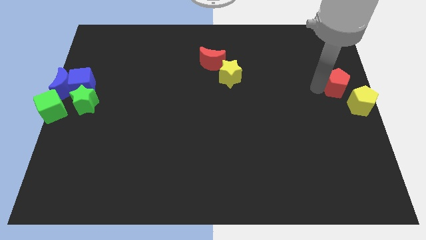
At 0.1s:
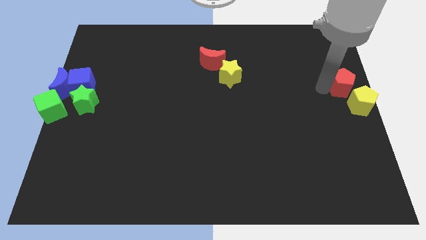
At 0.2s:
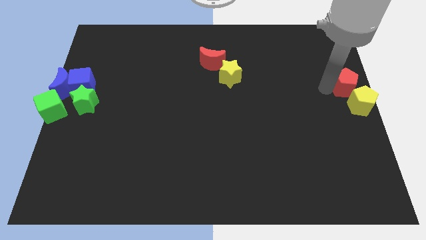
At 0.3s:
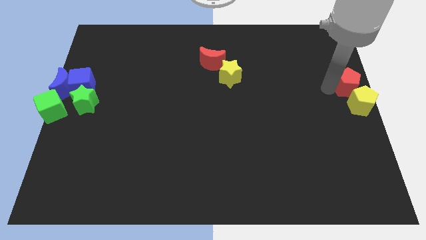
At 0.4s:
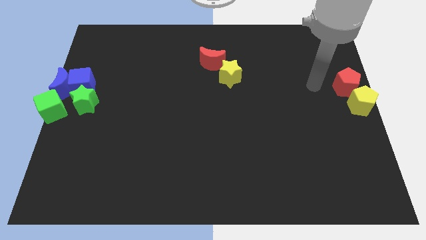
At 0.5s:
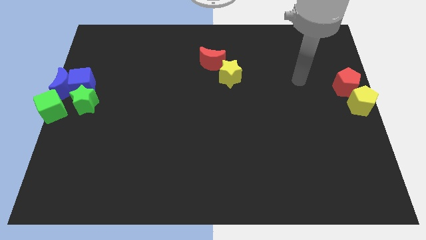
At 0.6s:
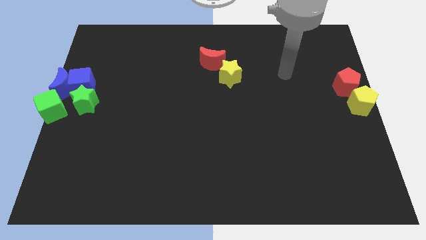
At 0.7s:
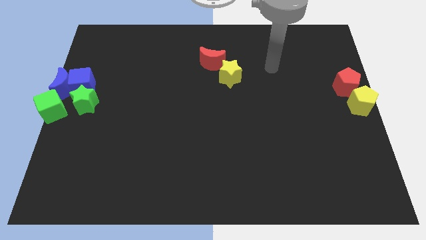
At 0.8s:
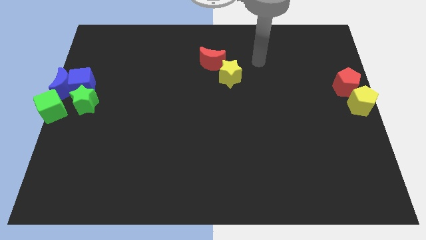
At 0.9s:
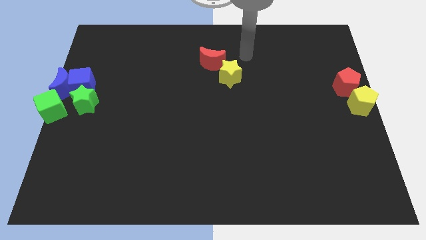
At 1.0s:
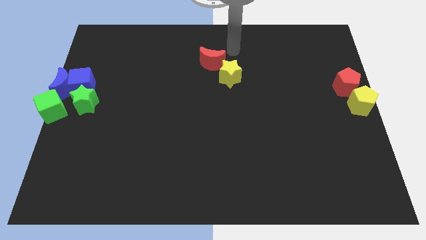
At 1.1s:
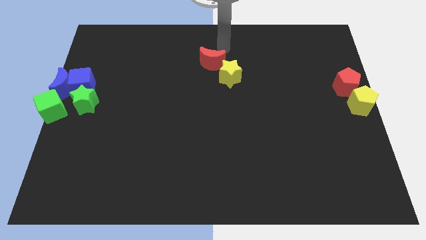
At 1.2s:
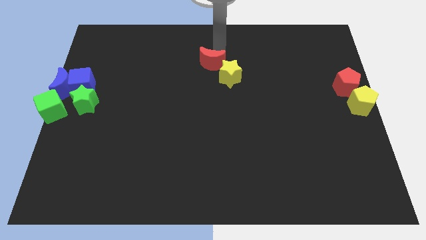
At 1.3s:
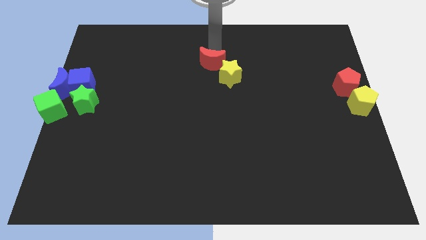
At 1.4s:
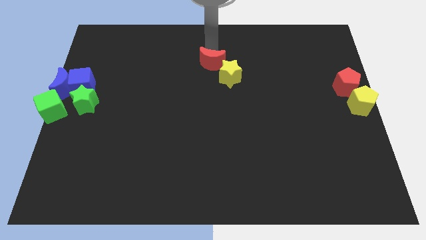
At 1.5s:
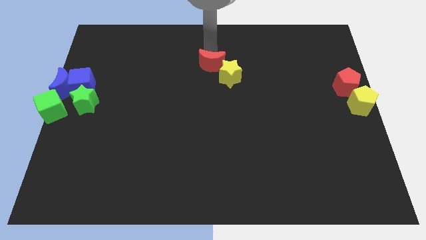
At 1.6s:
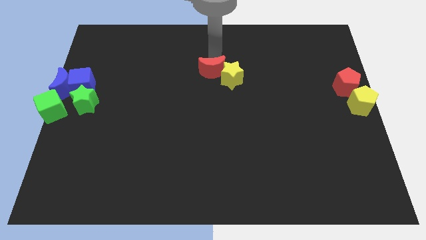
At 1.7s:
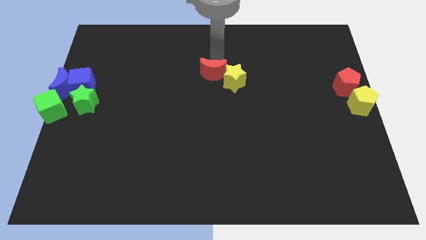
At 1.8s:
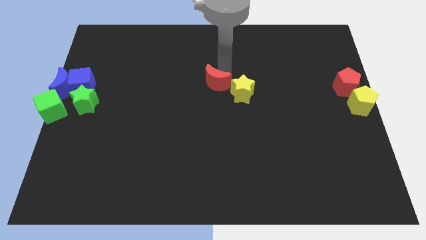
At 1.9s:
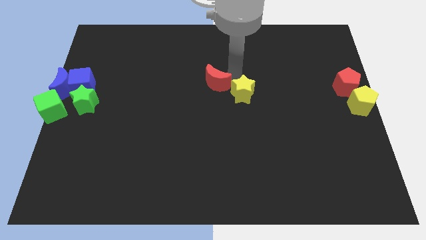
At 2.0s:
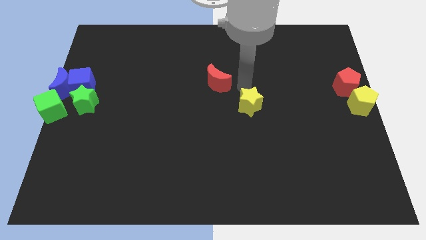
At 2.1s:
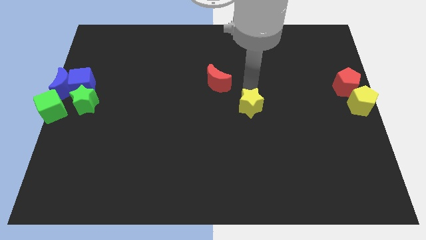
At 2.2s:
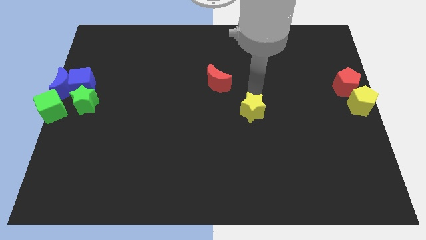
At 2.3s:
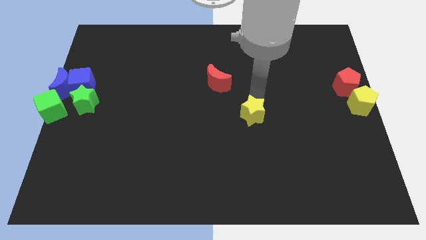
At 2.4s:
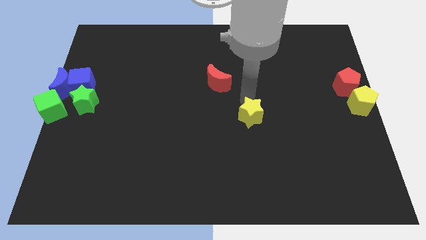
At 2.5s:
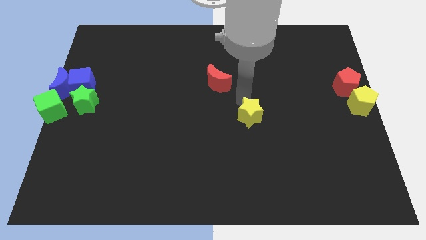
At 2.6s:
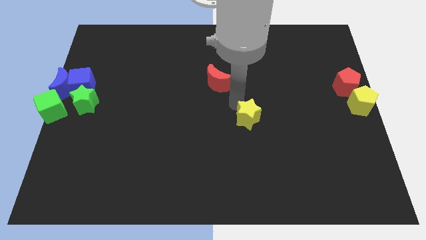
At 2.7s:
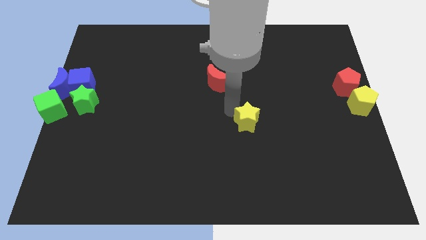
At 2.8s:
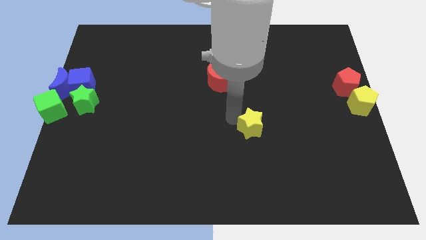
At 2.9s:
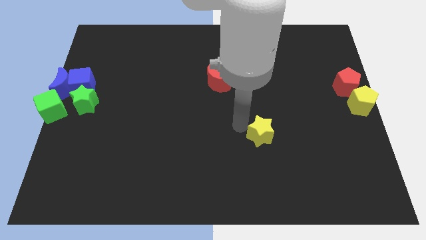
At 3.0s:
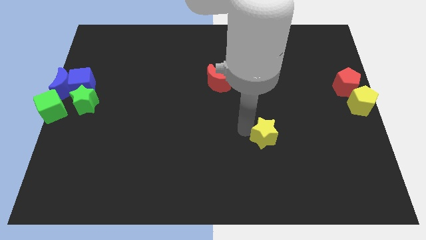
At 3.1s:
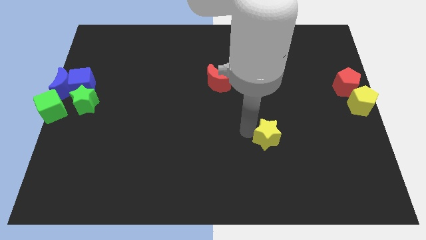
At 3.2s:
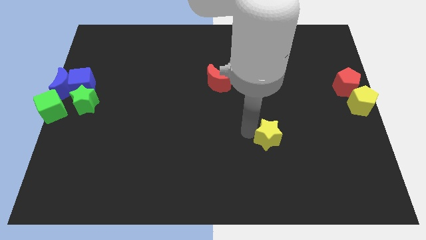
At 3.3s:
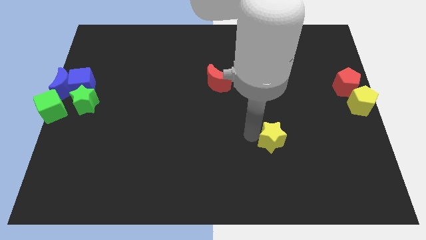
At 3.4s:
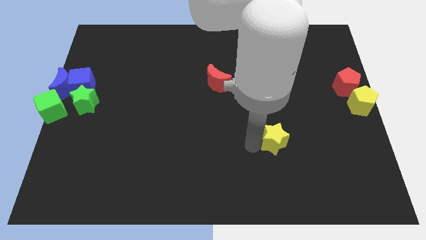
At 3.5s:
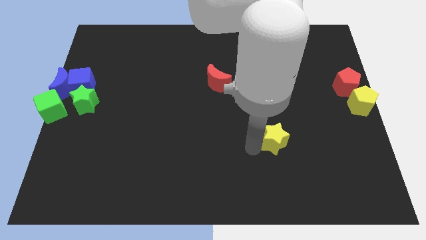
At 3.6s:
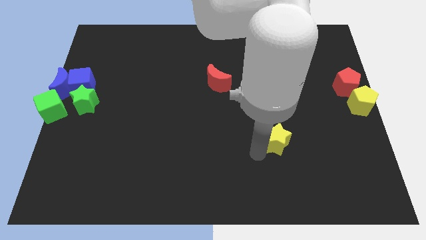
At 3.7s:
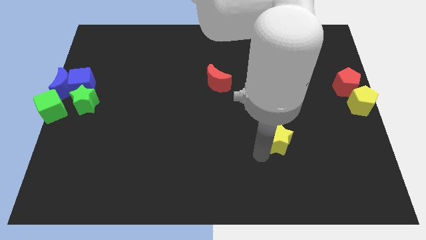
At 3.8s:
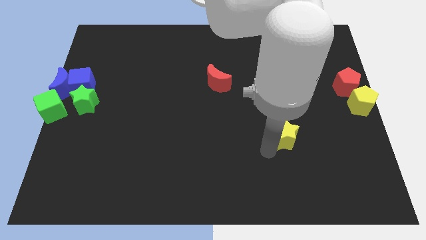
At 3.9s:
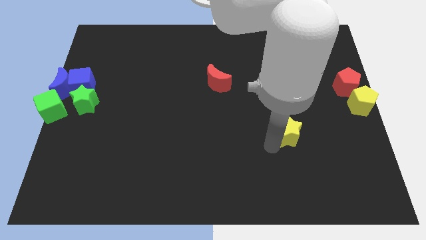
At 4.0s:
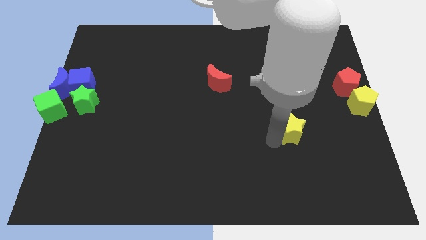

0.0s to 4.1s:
slide the yellow star diagonally bottom right red moon

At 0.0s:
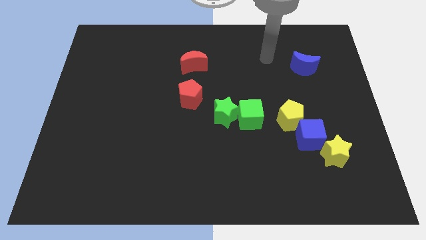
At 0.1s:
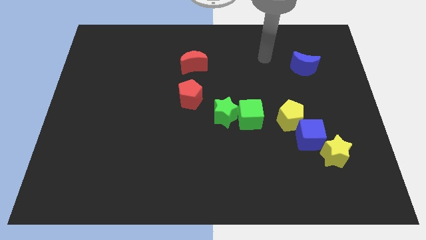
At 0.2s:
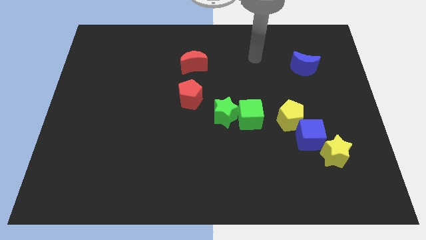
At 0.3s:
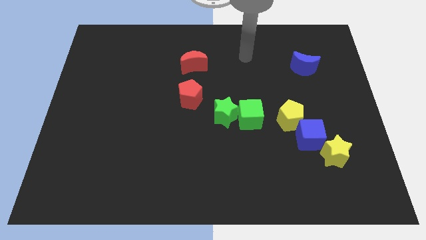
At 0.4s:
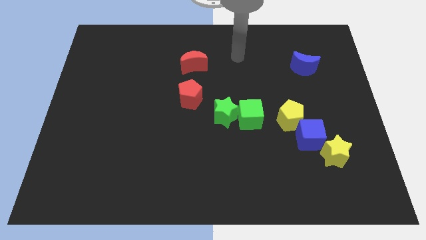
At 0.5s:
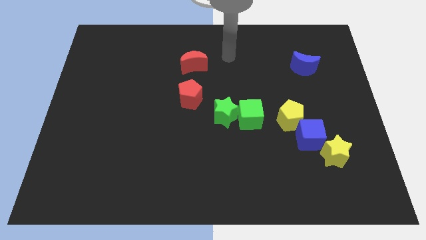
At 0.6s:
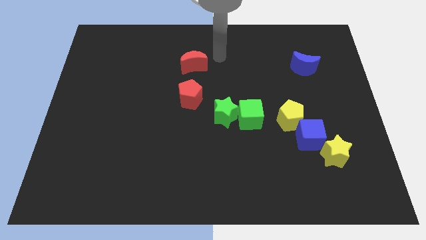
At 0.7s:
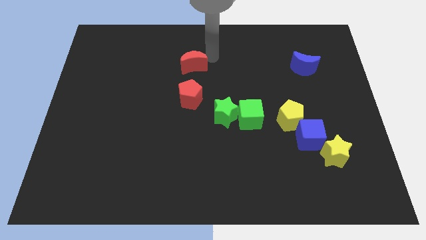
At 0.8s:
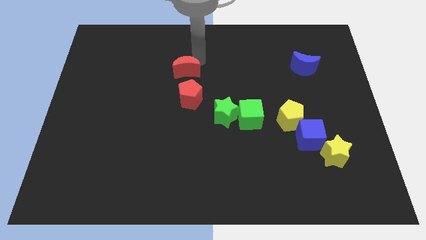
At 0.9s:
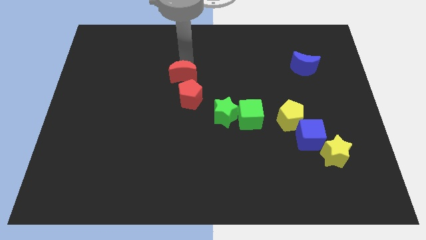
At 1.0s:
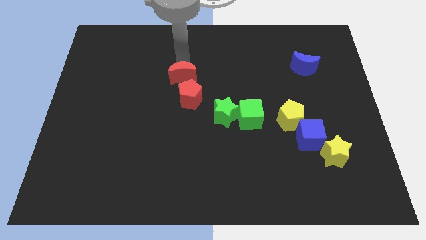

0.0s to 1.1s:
move your arm to the right of the red moon

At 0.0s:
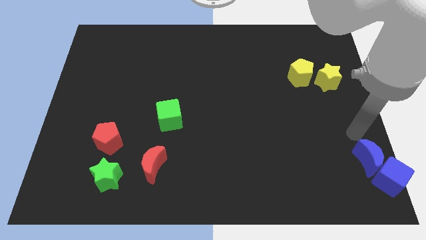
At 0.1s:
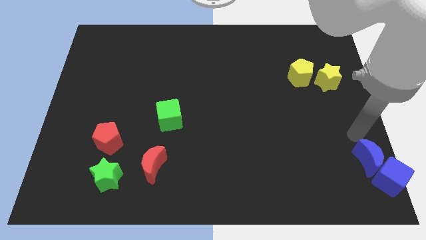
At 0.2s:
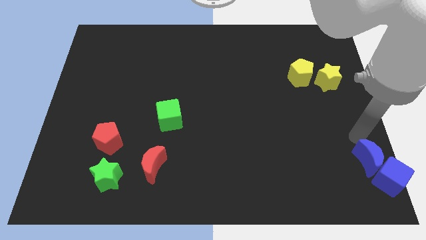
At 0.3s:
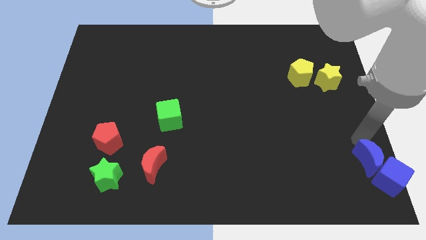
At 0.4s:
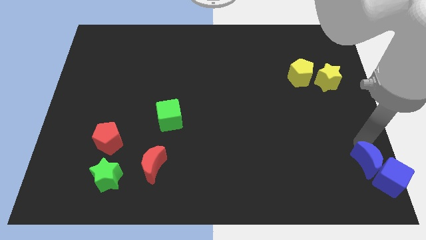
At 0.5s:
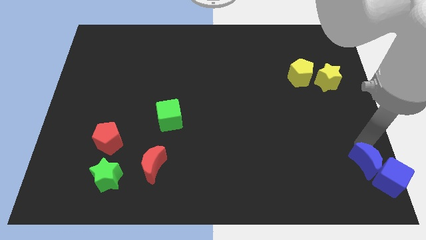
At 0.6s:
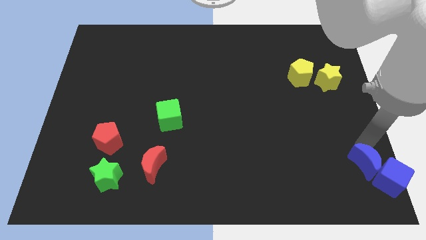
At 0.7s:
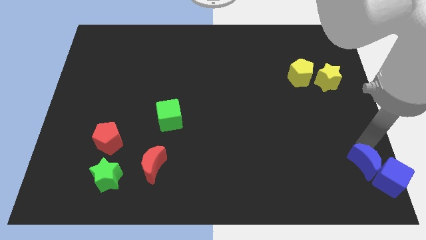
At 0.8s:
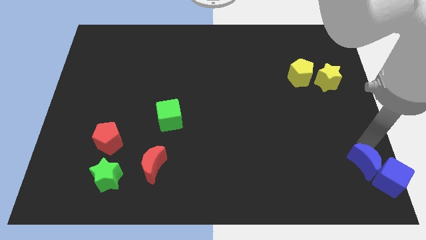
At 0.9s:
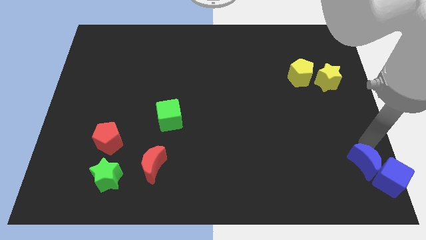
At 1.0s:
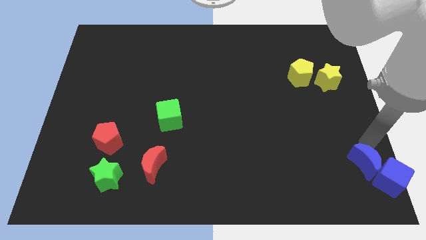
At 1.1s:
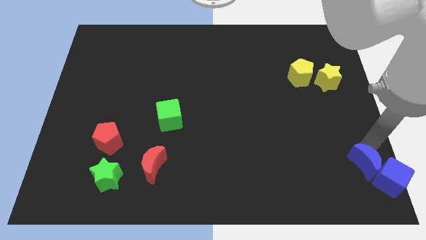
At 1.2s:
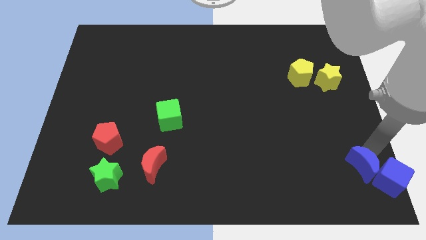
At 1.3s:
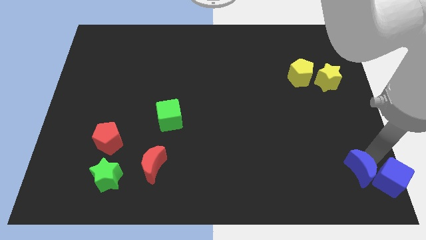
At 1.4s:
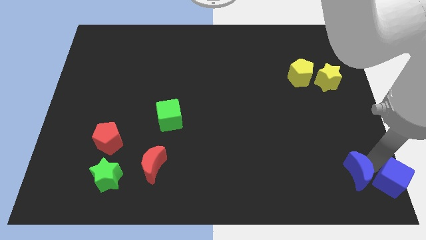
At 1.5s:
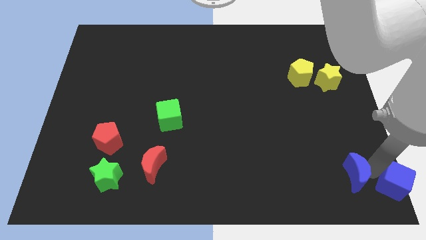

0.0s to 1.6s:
separate the blue moon from blue cube

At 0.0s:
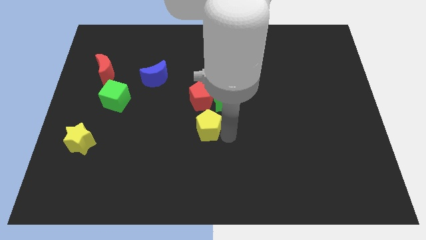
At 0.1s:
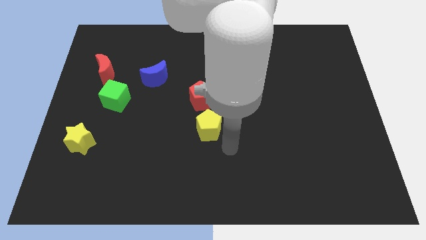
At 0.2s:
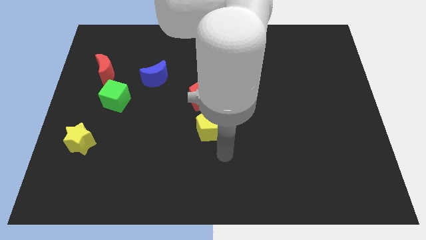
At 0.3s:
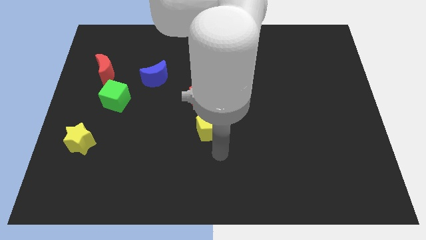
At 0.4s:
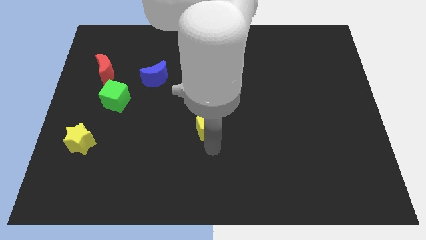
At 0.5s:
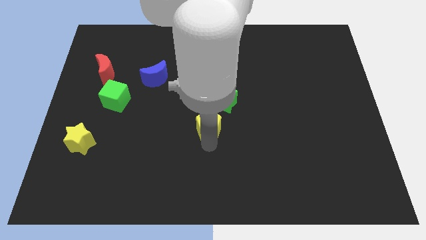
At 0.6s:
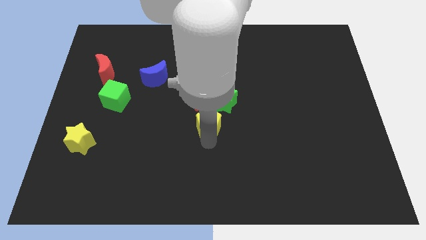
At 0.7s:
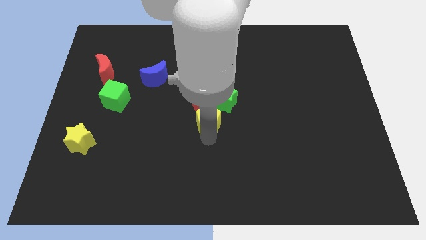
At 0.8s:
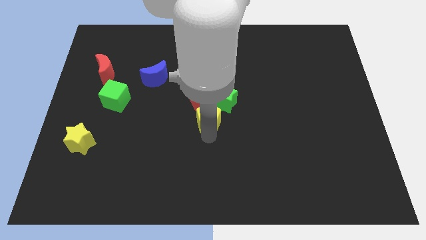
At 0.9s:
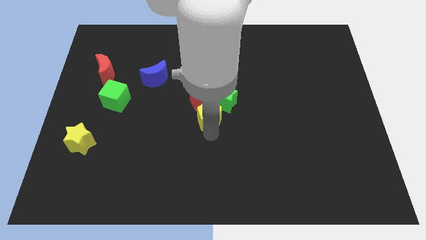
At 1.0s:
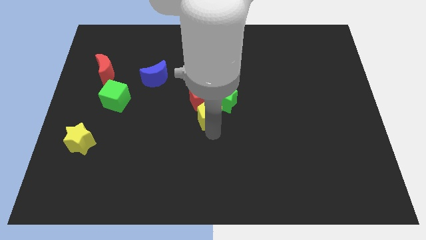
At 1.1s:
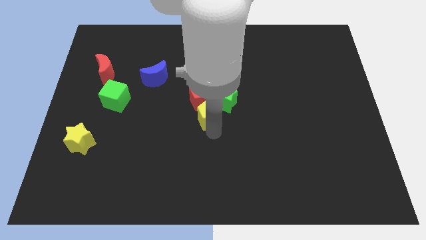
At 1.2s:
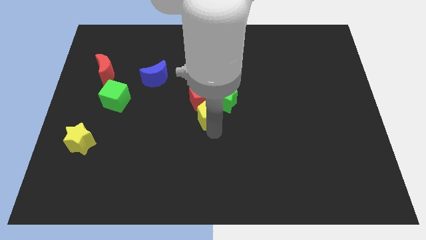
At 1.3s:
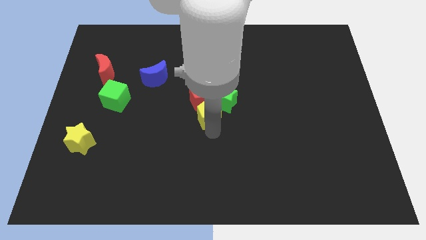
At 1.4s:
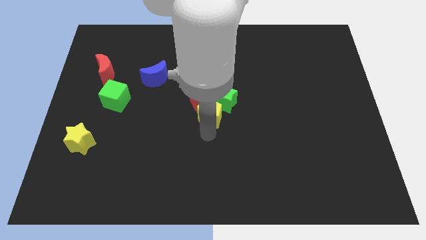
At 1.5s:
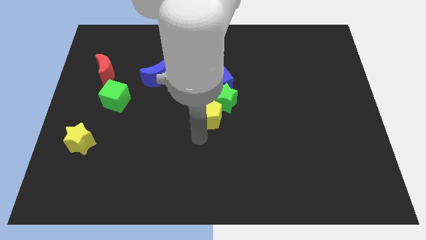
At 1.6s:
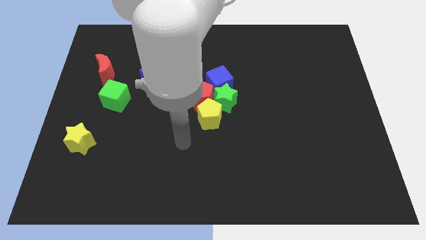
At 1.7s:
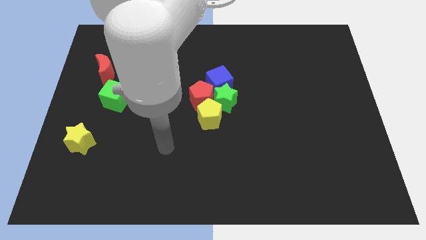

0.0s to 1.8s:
move the yellow pentagon close to the bottom of the green star and red pentagon

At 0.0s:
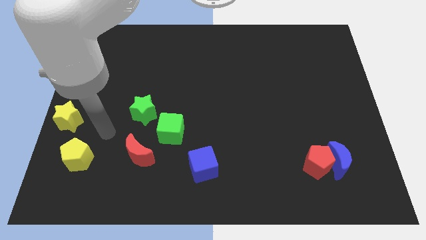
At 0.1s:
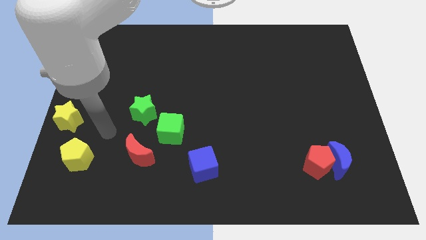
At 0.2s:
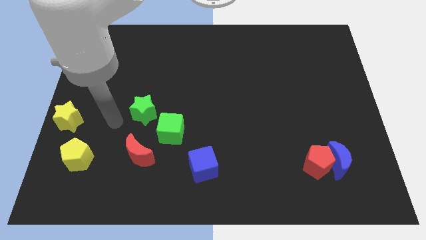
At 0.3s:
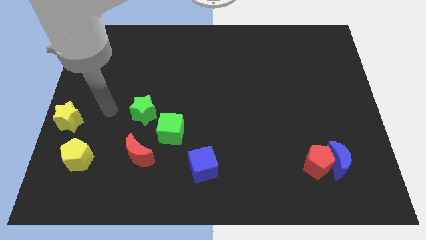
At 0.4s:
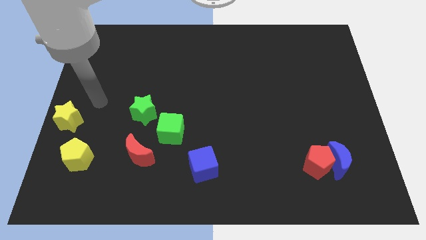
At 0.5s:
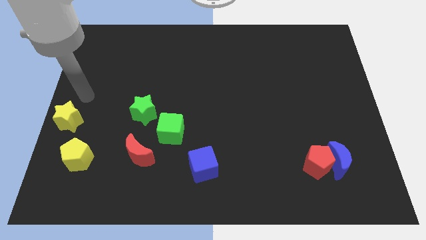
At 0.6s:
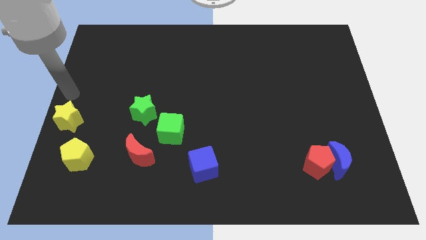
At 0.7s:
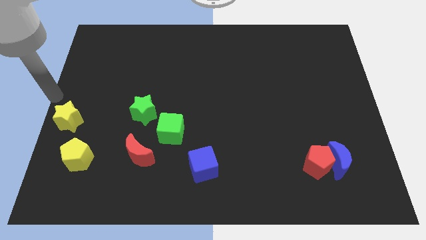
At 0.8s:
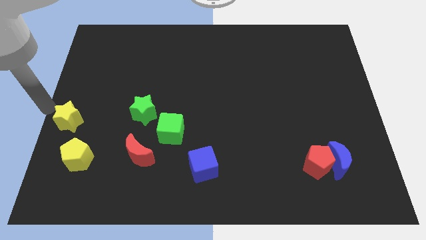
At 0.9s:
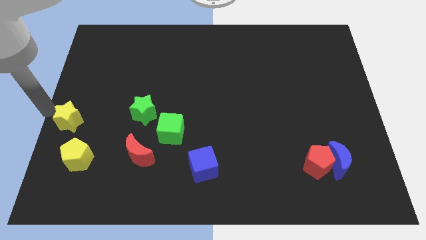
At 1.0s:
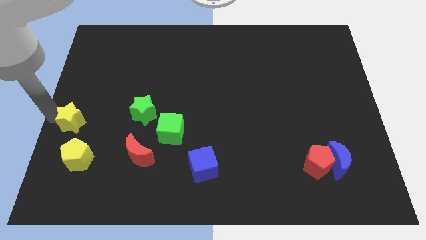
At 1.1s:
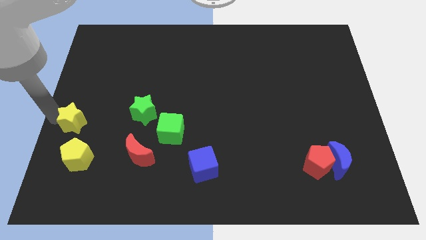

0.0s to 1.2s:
push yellow star downwards
